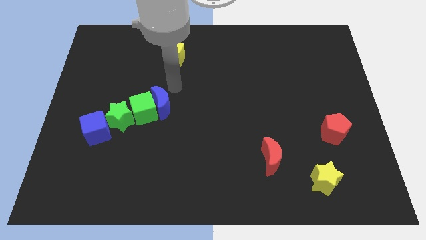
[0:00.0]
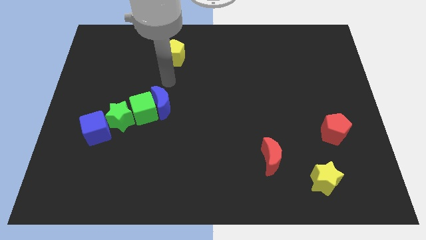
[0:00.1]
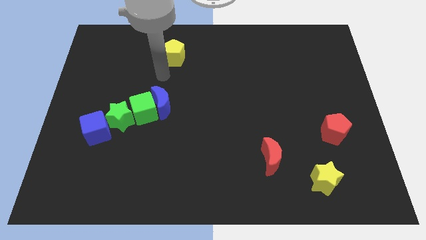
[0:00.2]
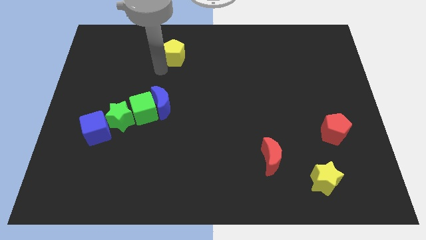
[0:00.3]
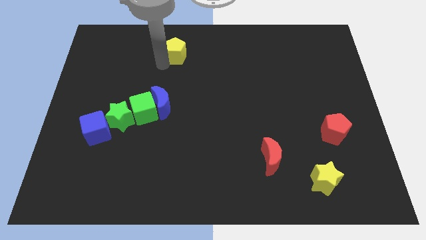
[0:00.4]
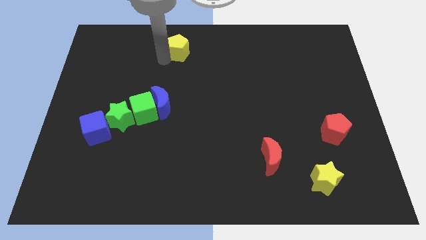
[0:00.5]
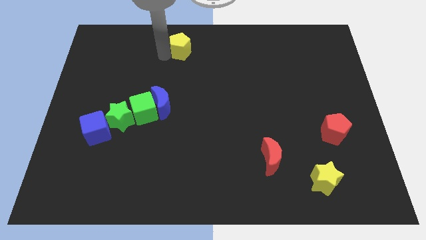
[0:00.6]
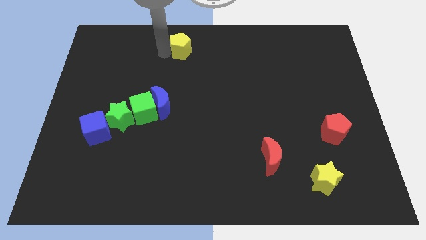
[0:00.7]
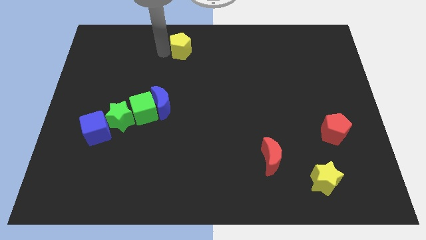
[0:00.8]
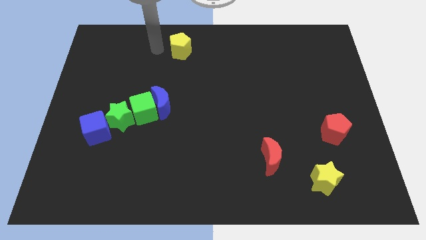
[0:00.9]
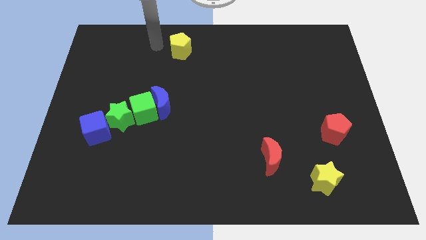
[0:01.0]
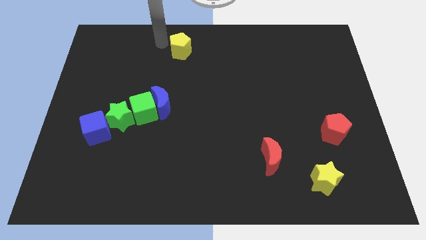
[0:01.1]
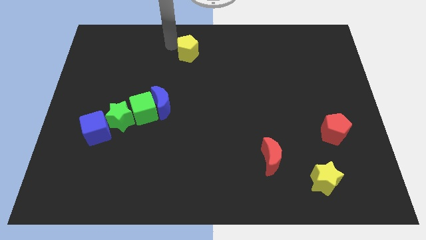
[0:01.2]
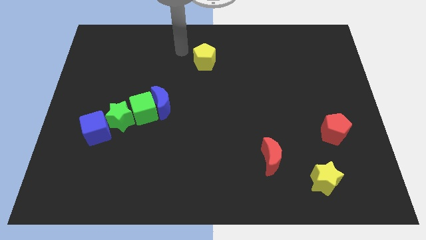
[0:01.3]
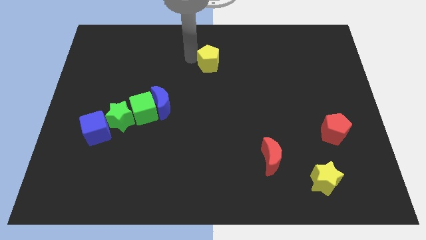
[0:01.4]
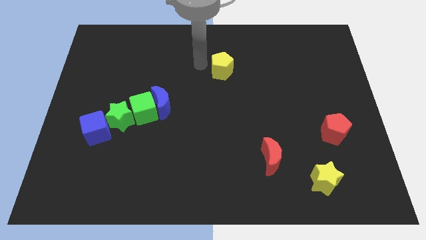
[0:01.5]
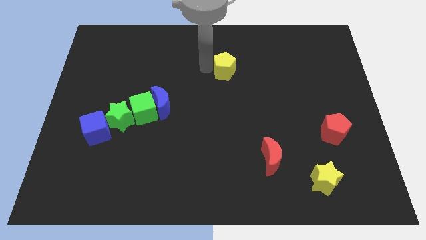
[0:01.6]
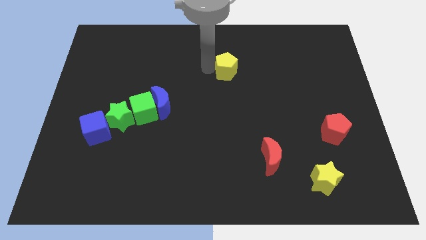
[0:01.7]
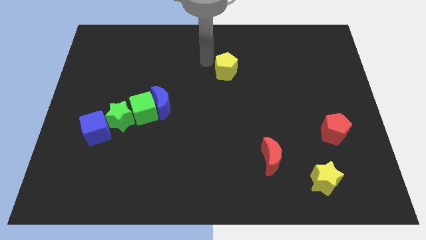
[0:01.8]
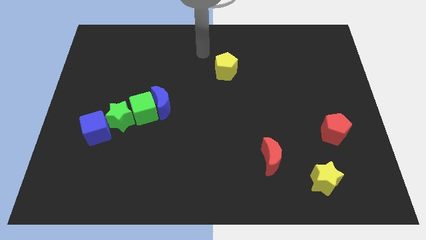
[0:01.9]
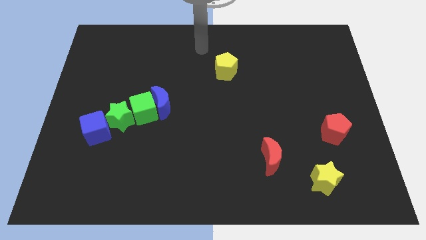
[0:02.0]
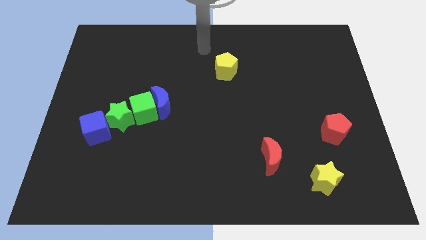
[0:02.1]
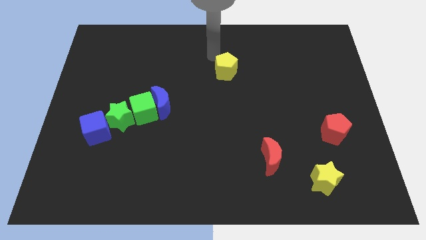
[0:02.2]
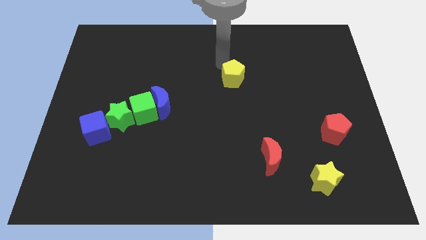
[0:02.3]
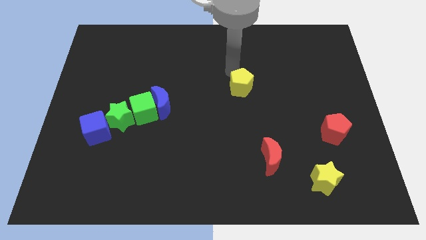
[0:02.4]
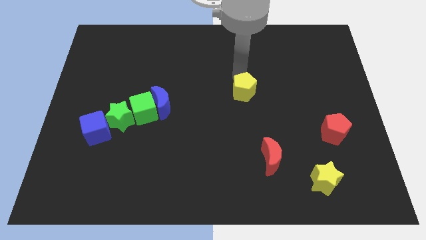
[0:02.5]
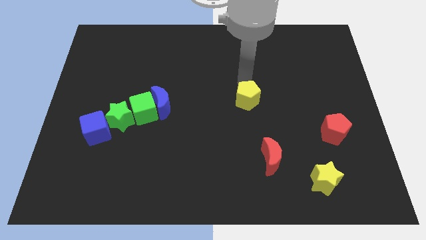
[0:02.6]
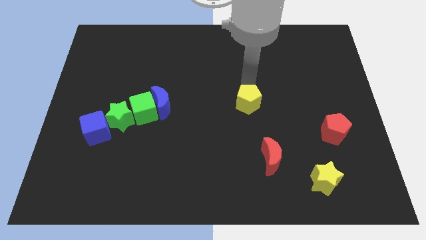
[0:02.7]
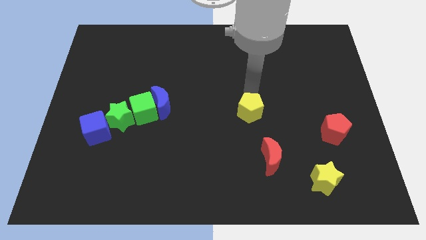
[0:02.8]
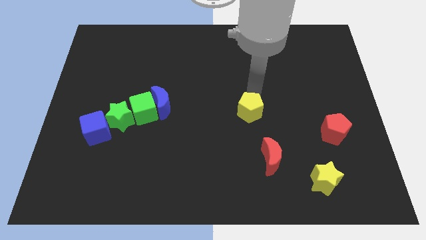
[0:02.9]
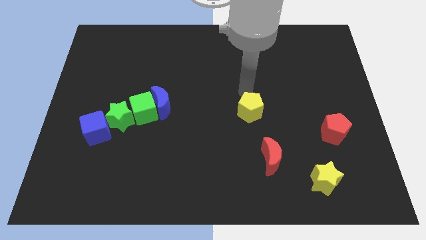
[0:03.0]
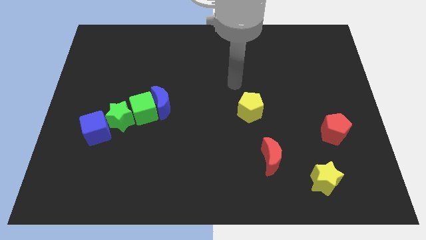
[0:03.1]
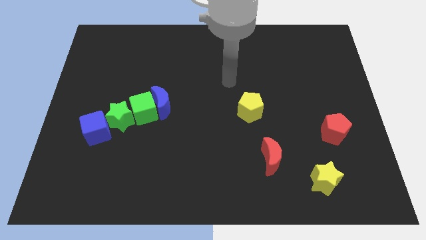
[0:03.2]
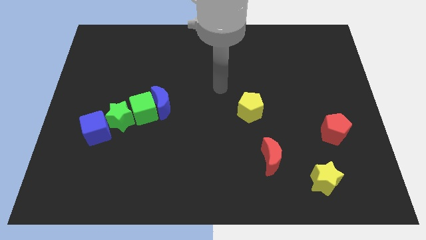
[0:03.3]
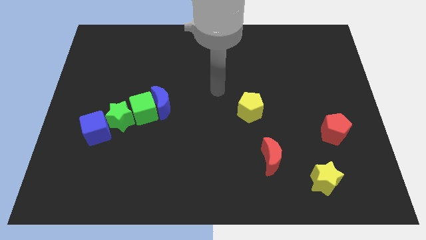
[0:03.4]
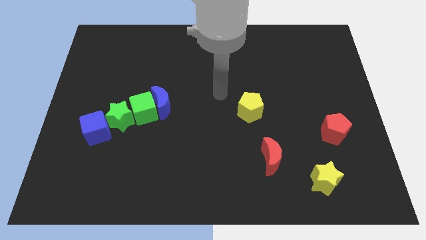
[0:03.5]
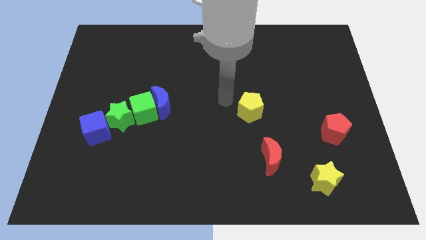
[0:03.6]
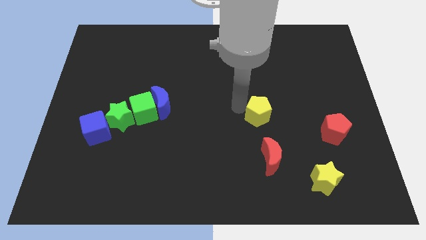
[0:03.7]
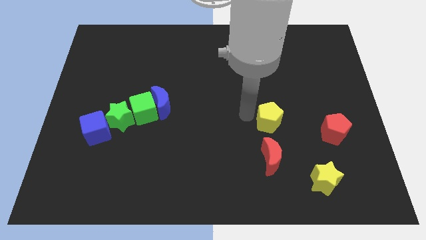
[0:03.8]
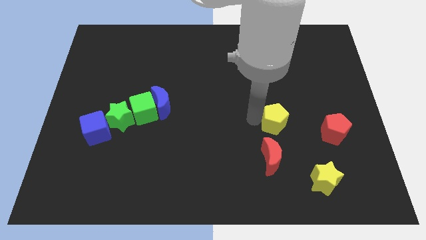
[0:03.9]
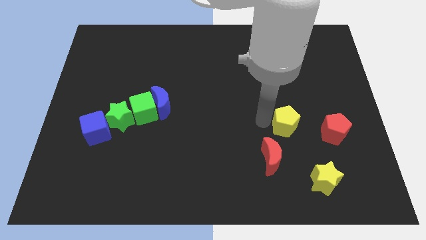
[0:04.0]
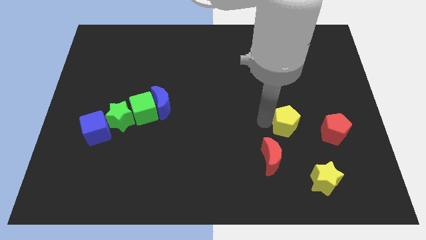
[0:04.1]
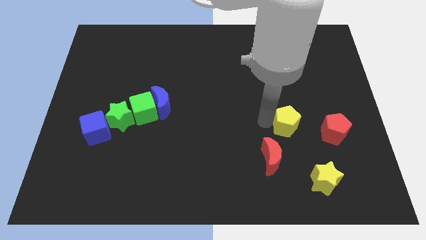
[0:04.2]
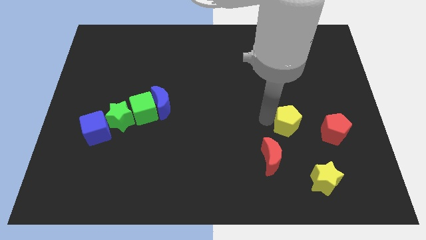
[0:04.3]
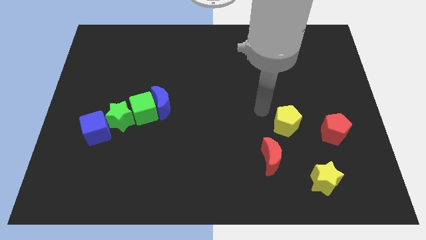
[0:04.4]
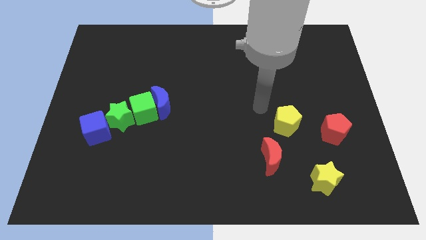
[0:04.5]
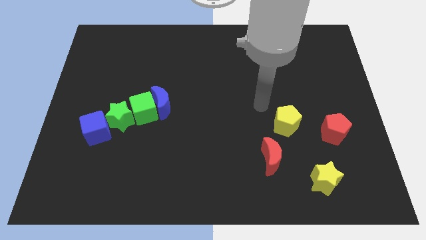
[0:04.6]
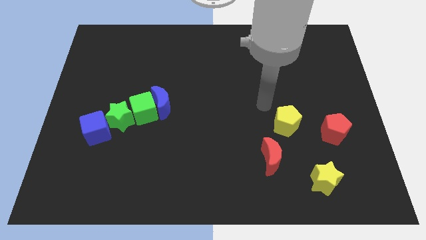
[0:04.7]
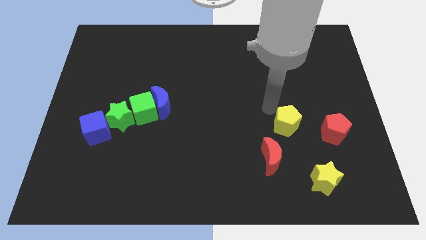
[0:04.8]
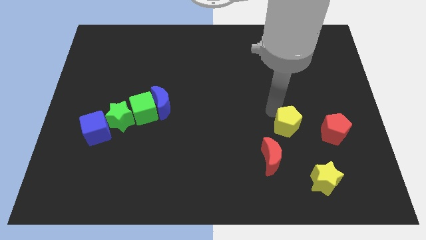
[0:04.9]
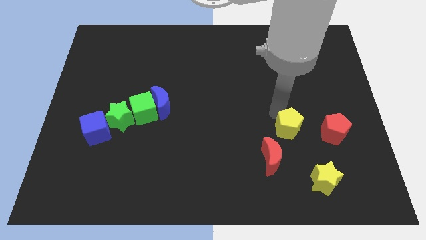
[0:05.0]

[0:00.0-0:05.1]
push the yellow pentagon to the left of the red pentagon

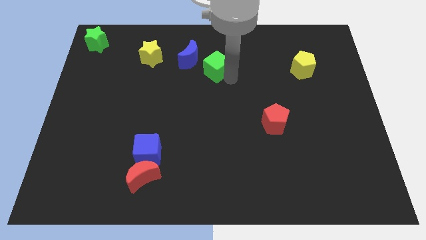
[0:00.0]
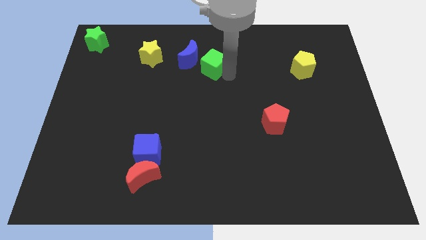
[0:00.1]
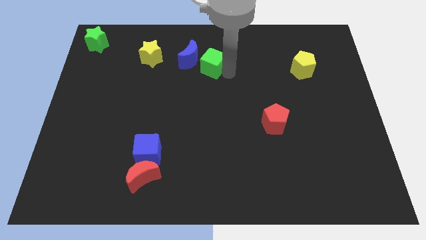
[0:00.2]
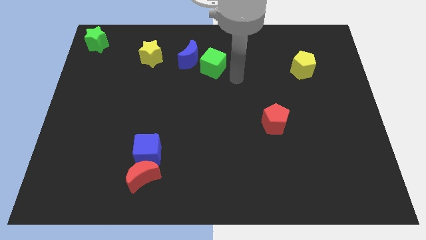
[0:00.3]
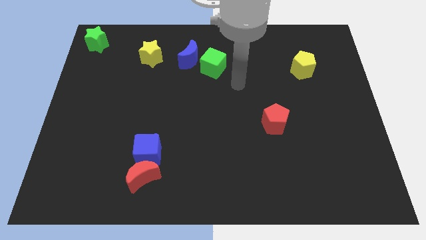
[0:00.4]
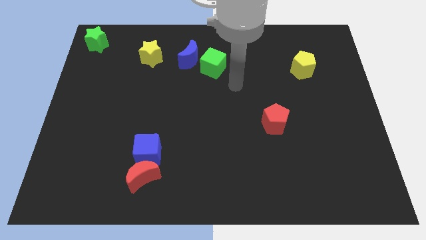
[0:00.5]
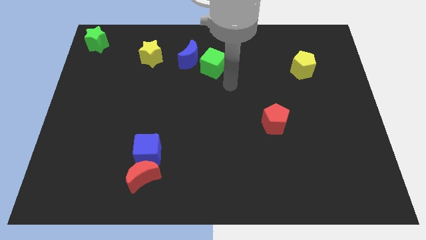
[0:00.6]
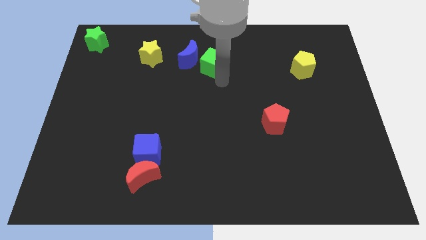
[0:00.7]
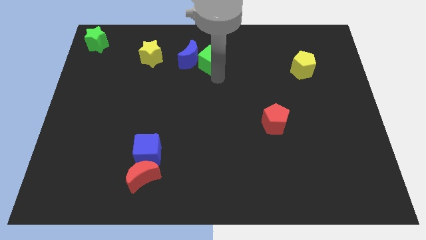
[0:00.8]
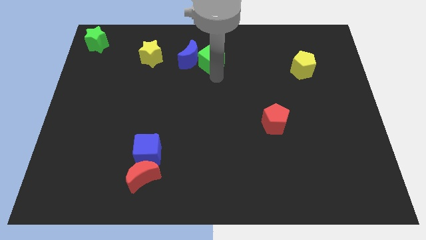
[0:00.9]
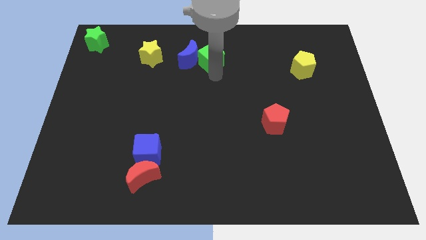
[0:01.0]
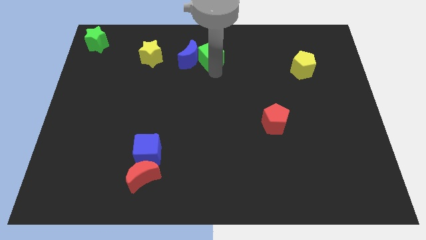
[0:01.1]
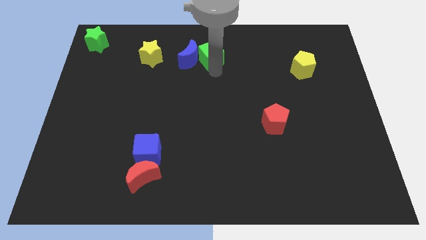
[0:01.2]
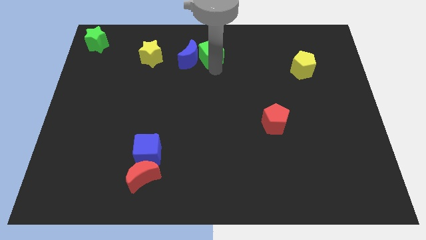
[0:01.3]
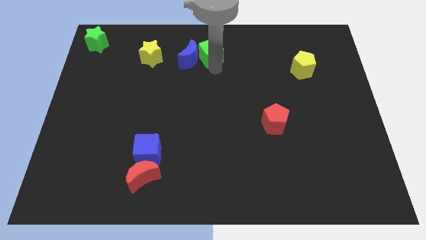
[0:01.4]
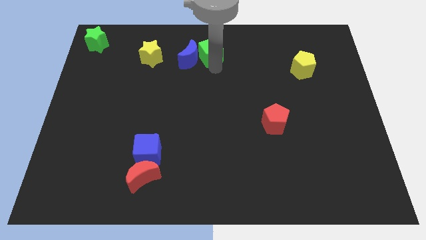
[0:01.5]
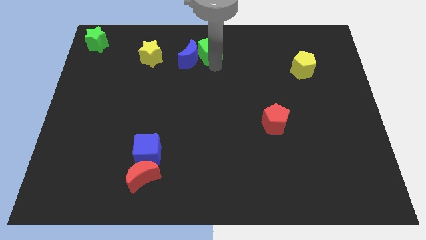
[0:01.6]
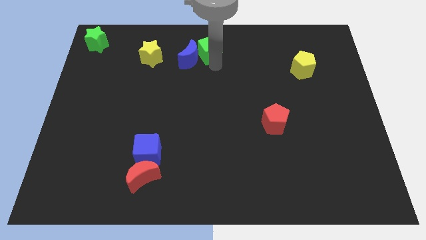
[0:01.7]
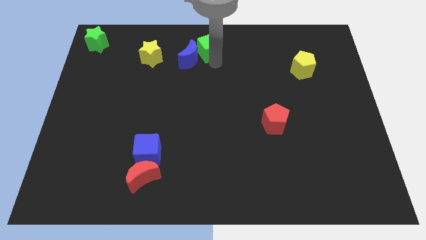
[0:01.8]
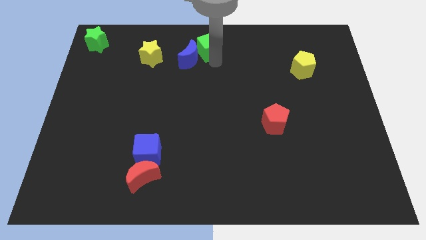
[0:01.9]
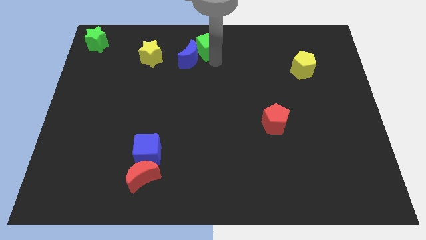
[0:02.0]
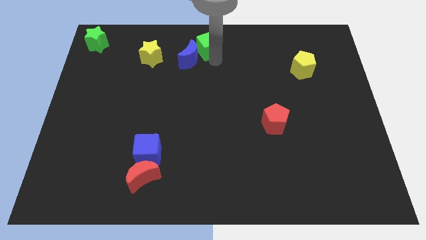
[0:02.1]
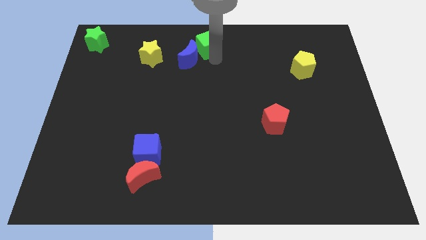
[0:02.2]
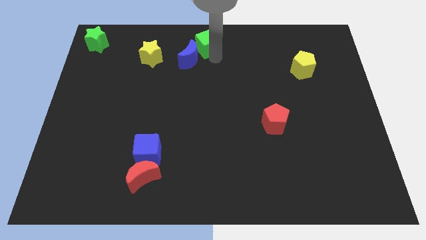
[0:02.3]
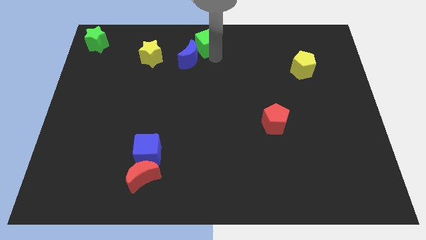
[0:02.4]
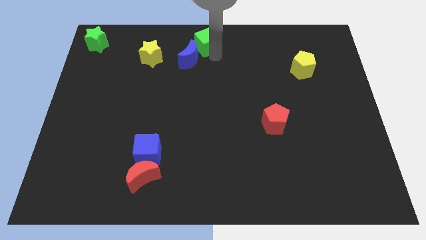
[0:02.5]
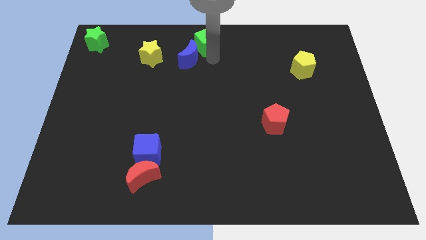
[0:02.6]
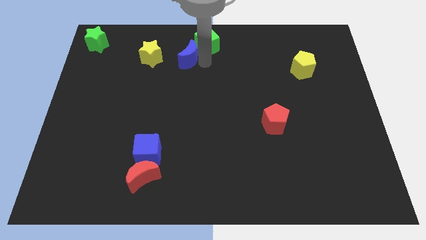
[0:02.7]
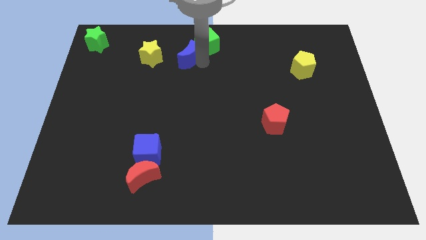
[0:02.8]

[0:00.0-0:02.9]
move the green cube to the center top

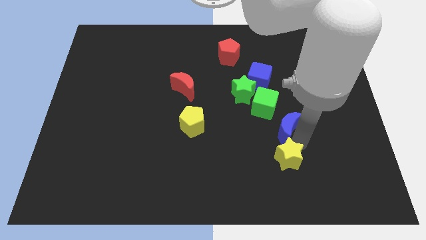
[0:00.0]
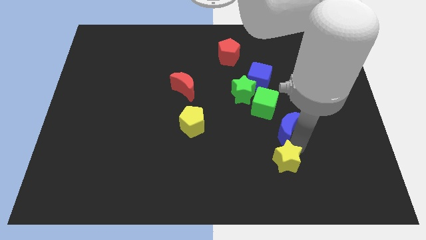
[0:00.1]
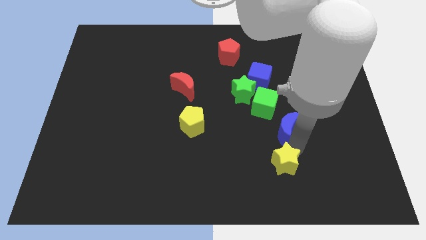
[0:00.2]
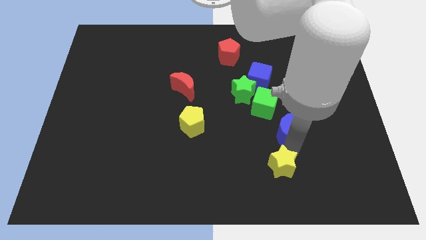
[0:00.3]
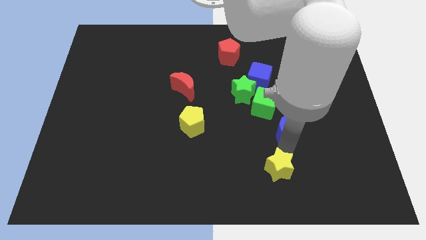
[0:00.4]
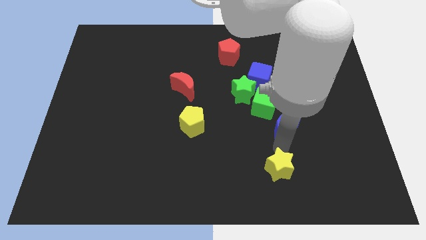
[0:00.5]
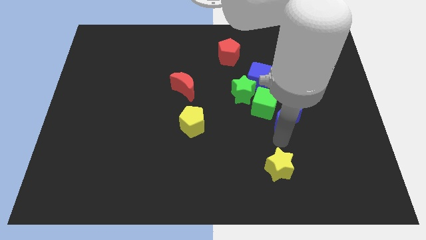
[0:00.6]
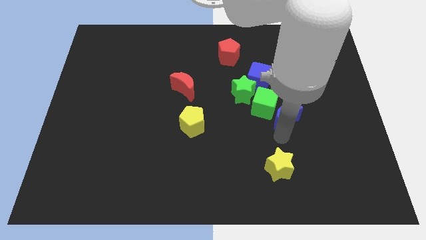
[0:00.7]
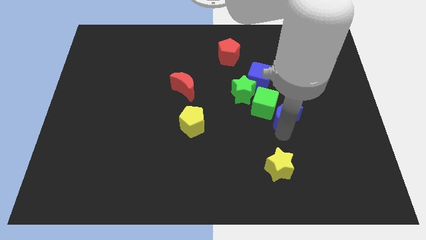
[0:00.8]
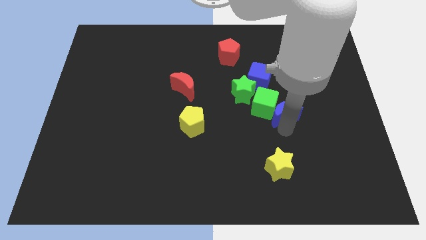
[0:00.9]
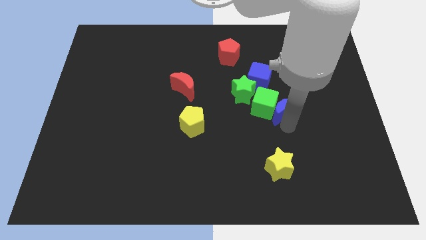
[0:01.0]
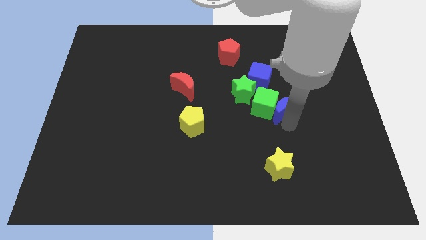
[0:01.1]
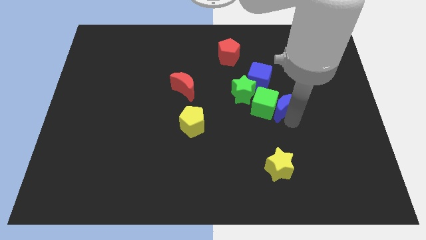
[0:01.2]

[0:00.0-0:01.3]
separate the blue moon and the yellow star
